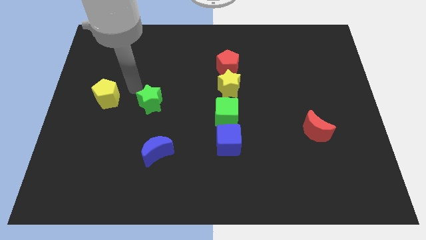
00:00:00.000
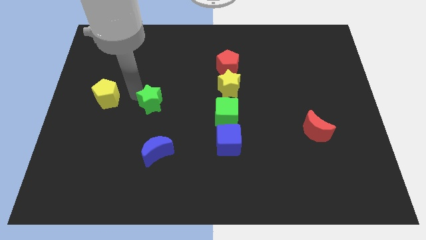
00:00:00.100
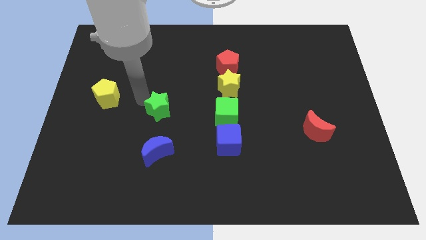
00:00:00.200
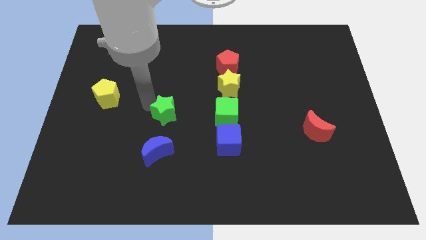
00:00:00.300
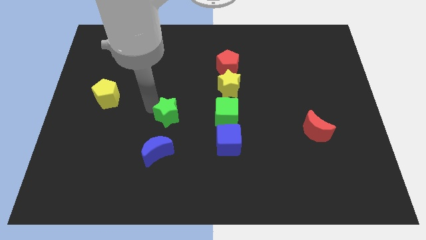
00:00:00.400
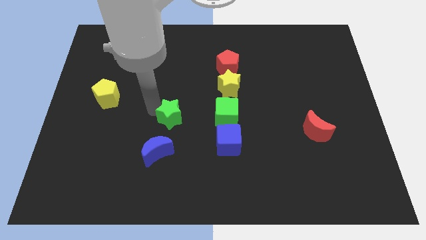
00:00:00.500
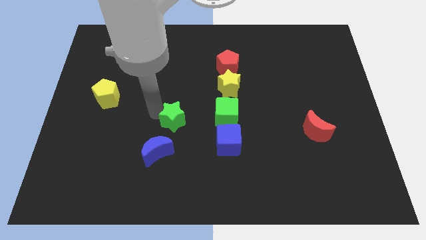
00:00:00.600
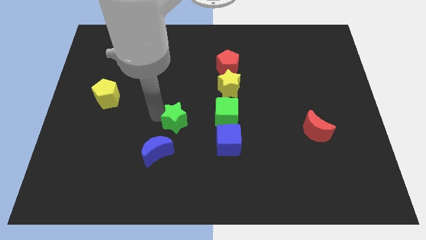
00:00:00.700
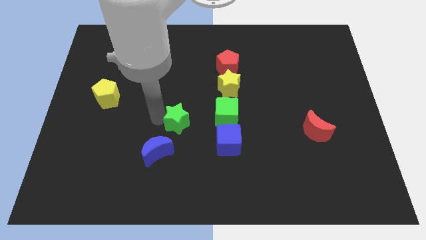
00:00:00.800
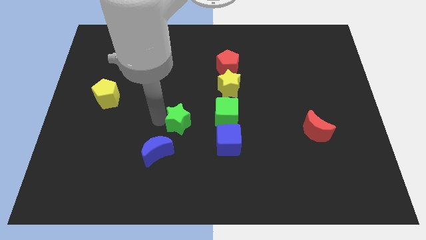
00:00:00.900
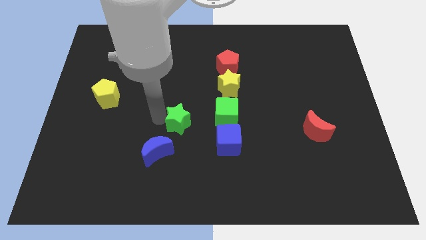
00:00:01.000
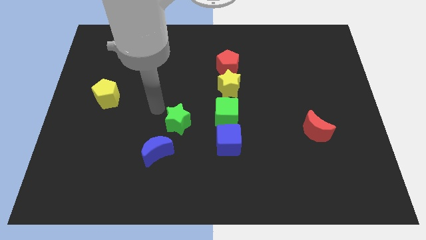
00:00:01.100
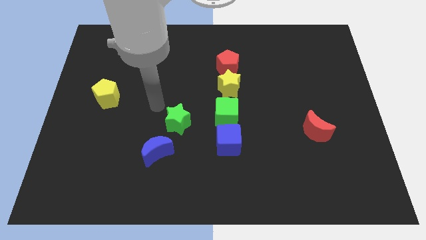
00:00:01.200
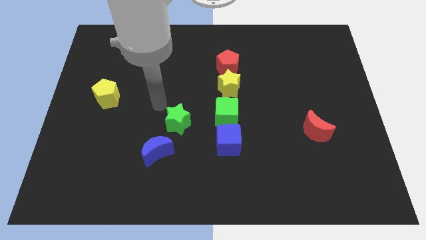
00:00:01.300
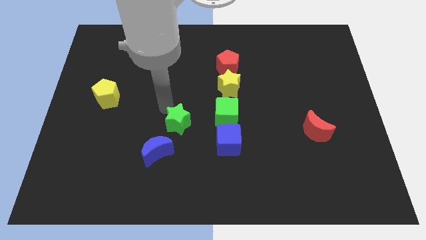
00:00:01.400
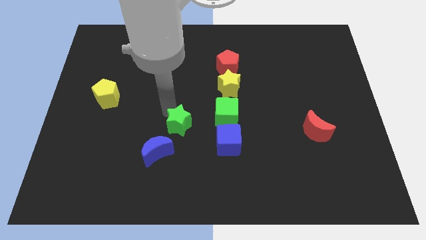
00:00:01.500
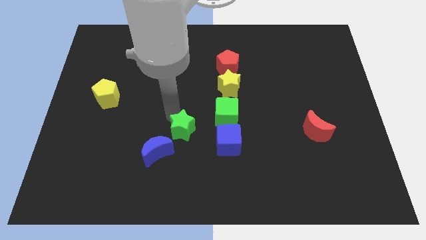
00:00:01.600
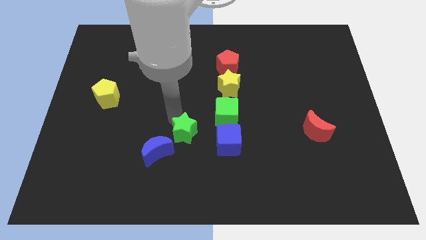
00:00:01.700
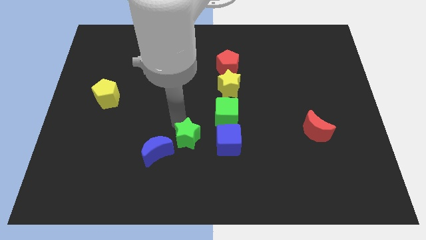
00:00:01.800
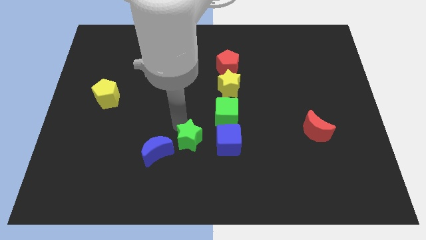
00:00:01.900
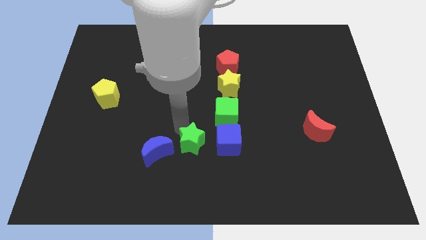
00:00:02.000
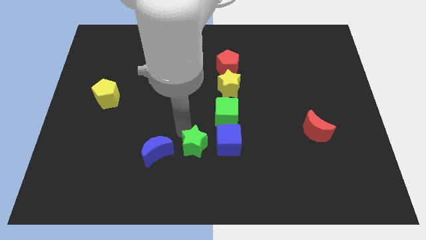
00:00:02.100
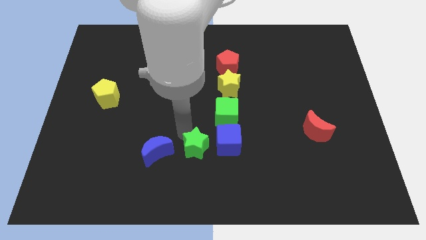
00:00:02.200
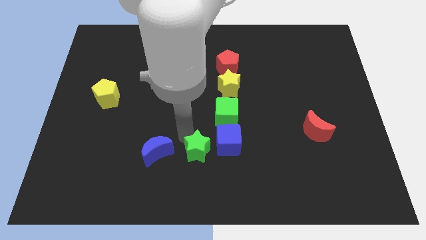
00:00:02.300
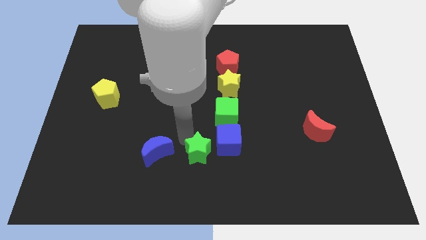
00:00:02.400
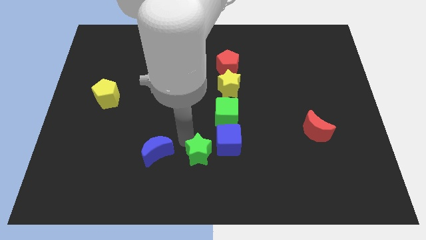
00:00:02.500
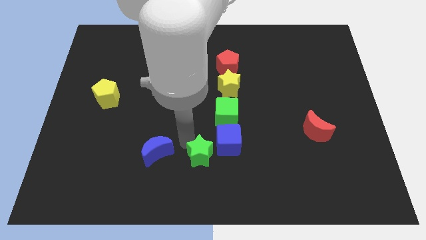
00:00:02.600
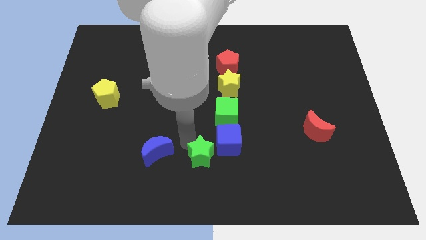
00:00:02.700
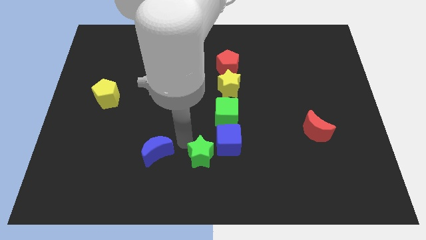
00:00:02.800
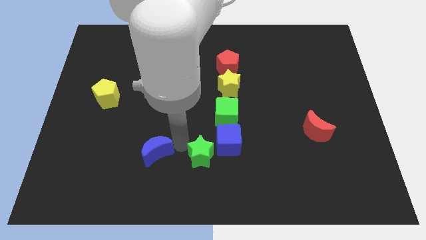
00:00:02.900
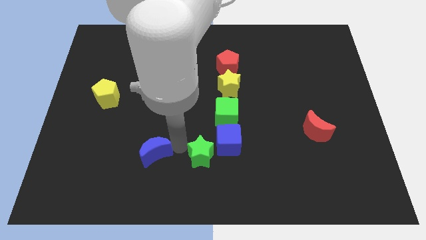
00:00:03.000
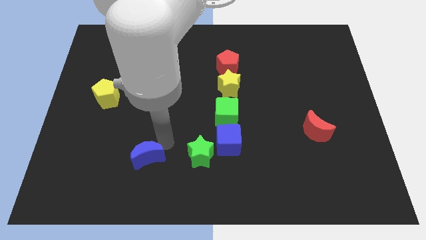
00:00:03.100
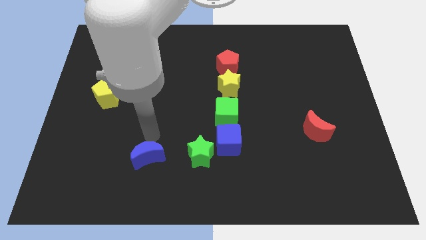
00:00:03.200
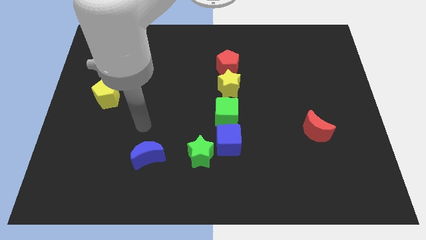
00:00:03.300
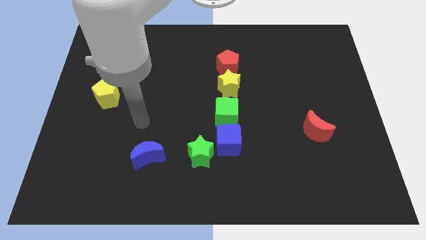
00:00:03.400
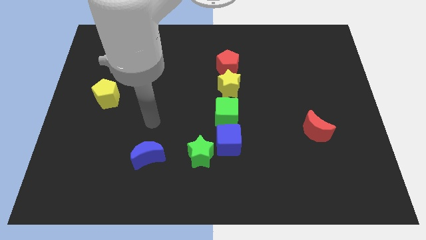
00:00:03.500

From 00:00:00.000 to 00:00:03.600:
place green star near blue cube

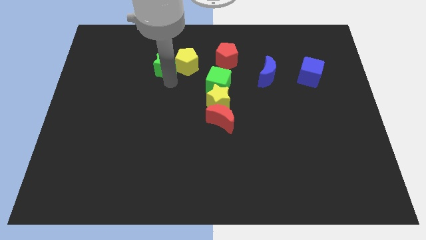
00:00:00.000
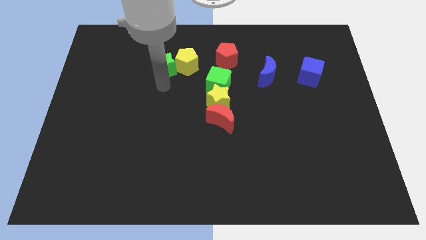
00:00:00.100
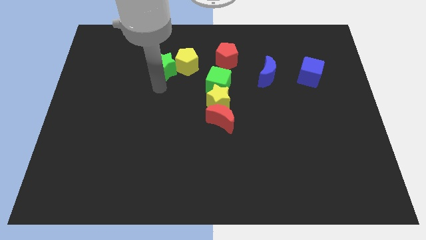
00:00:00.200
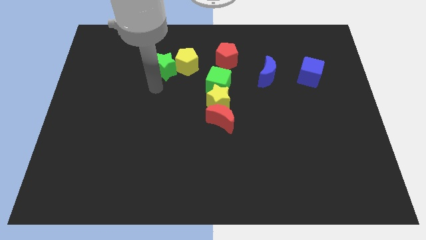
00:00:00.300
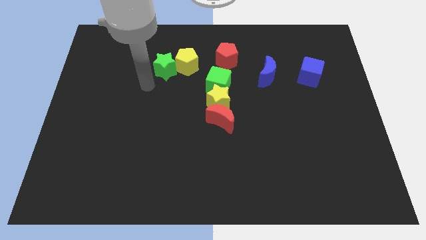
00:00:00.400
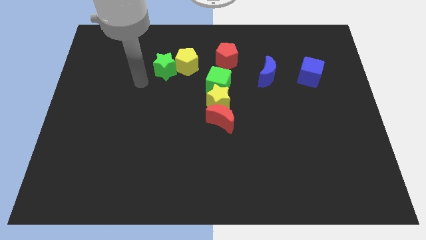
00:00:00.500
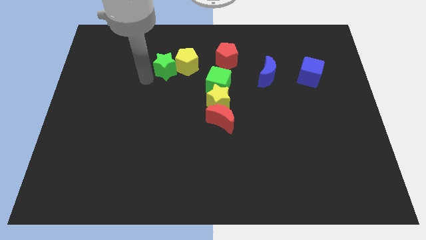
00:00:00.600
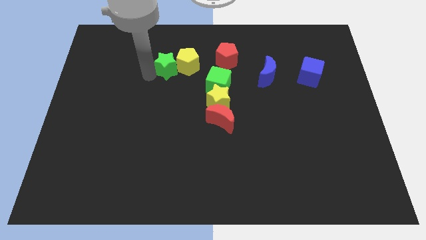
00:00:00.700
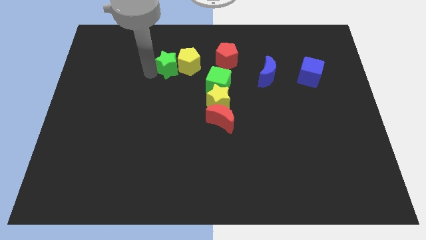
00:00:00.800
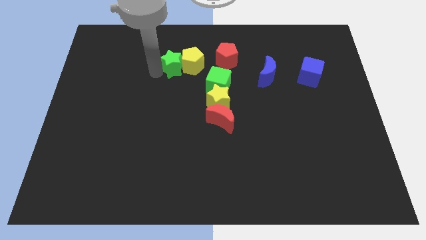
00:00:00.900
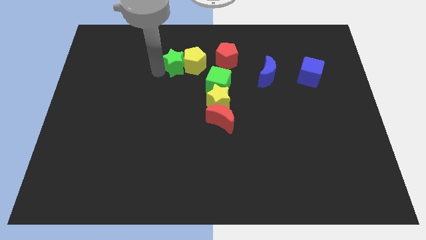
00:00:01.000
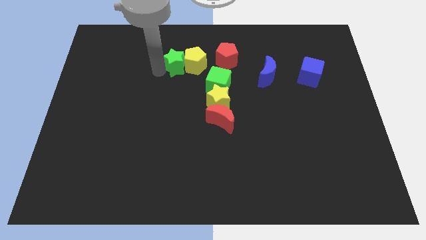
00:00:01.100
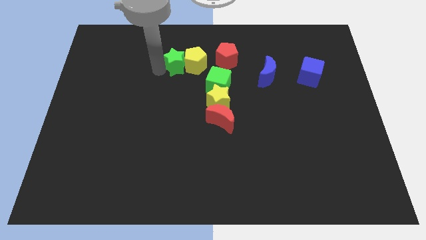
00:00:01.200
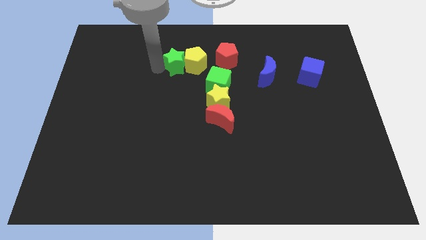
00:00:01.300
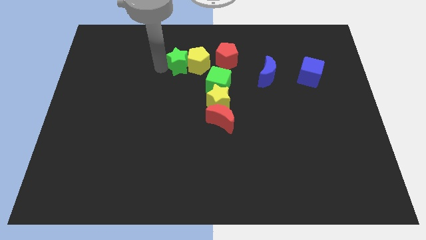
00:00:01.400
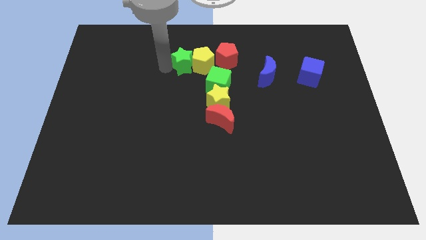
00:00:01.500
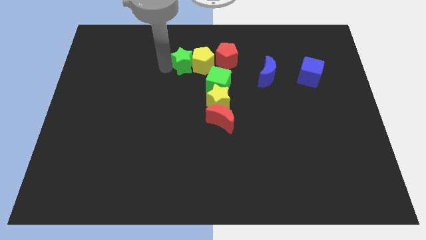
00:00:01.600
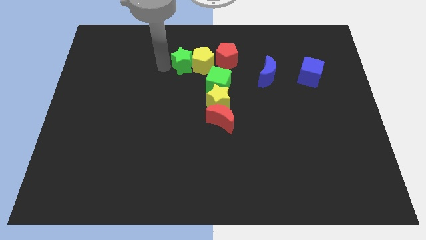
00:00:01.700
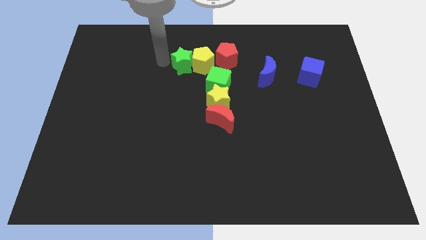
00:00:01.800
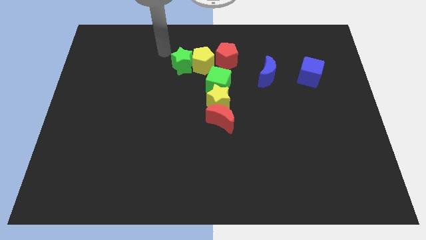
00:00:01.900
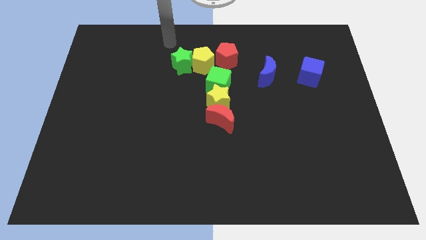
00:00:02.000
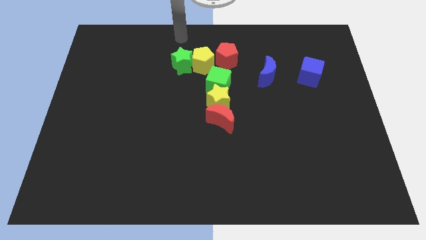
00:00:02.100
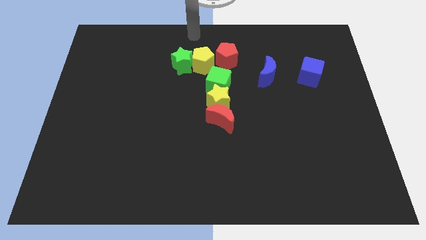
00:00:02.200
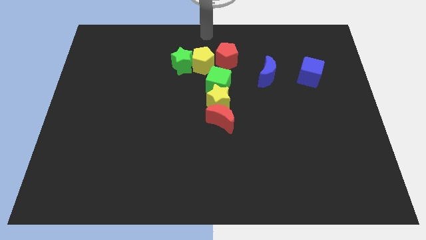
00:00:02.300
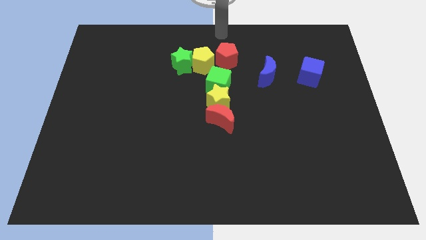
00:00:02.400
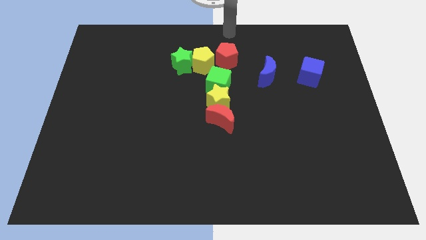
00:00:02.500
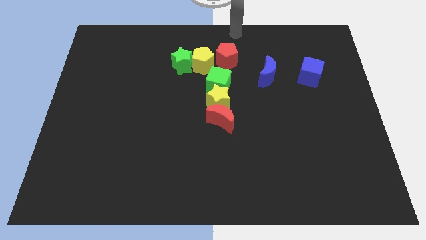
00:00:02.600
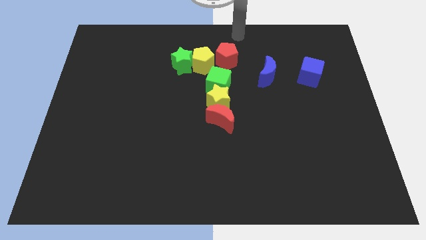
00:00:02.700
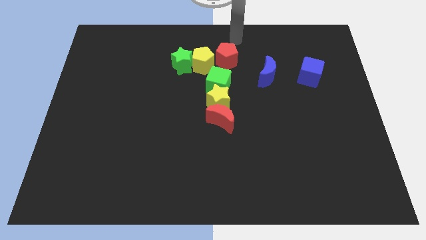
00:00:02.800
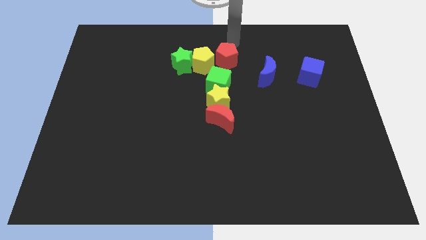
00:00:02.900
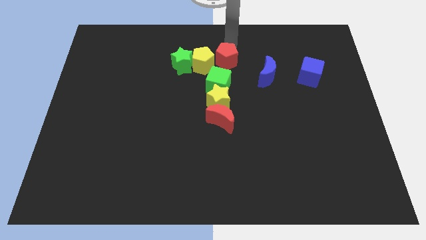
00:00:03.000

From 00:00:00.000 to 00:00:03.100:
move the green star along with yellow pentagon to the left of the red pentagon

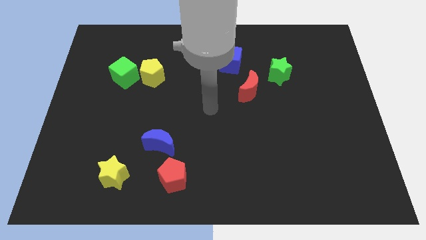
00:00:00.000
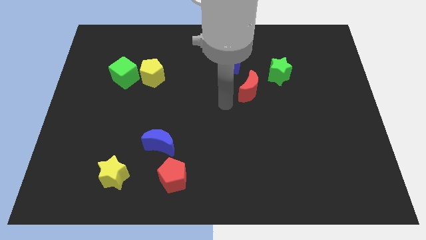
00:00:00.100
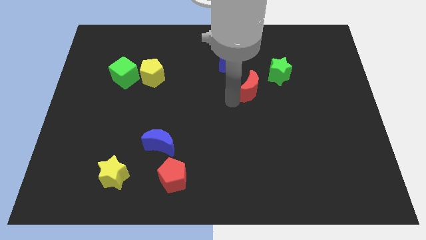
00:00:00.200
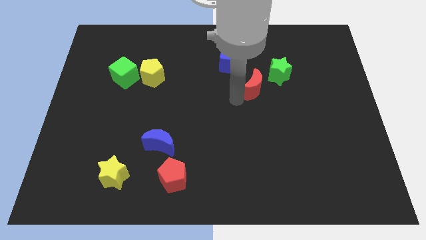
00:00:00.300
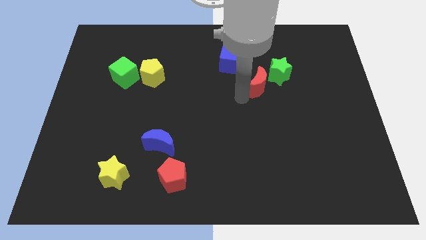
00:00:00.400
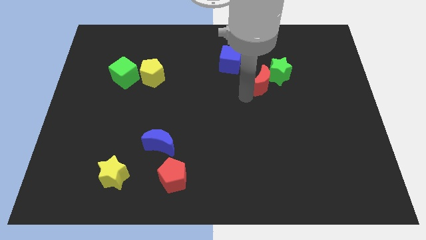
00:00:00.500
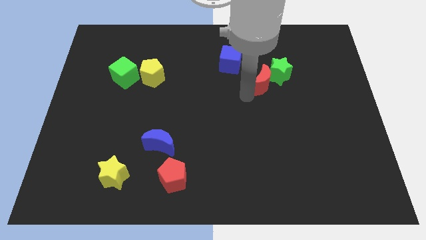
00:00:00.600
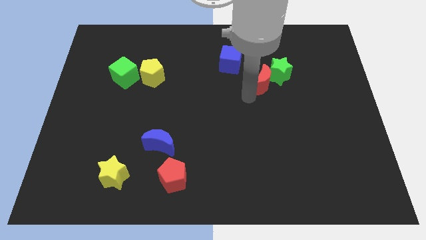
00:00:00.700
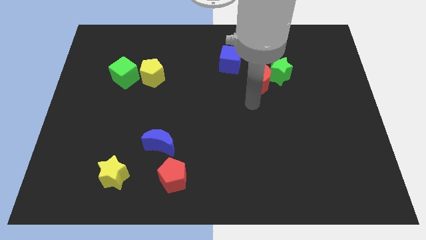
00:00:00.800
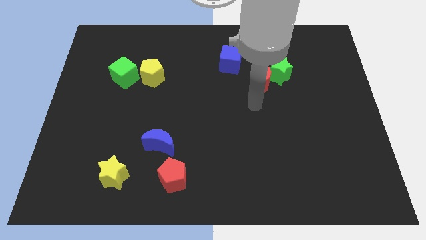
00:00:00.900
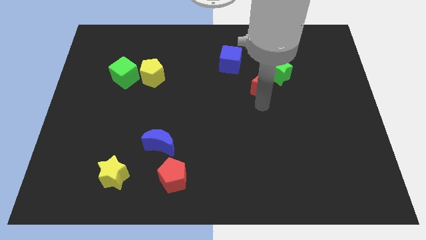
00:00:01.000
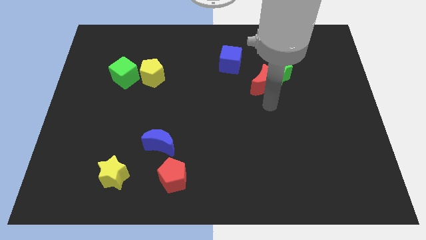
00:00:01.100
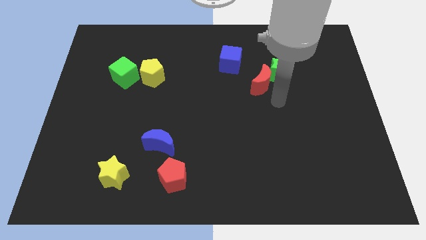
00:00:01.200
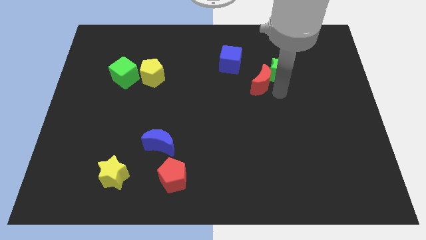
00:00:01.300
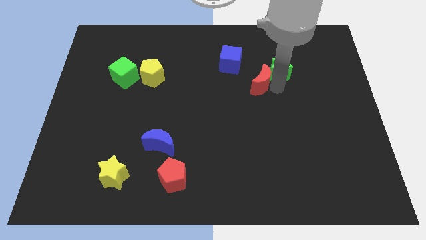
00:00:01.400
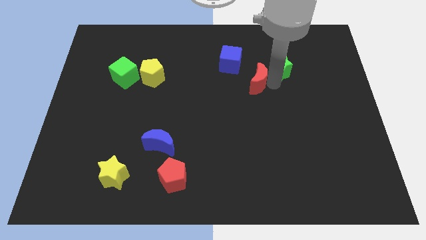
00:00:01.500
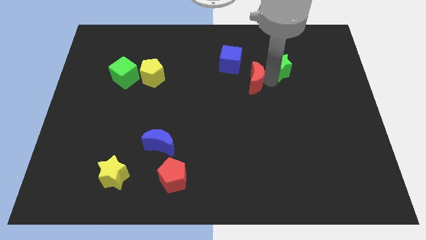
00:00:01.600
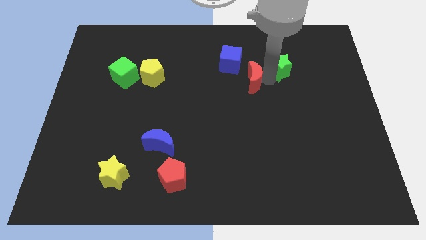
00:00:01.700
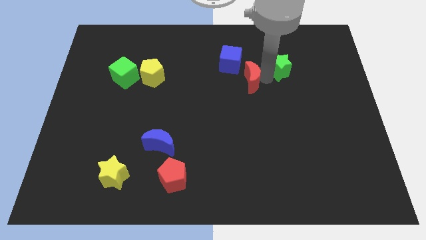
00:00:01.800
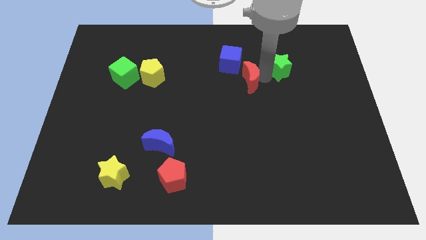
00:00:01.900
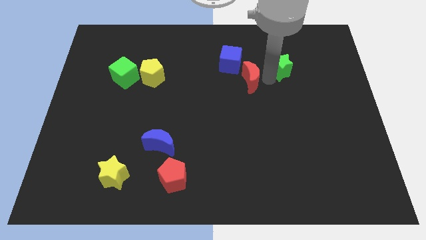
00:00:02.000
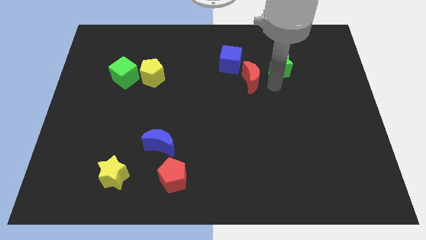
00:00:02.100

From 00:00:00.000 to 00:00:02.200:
move red moon to the bottom right of blue cube
